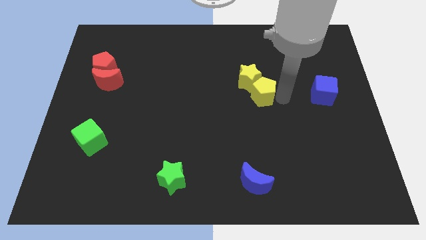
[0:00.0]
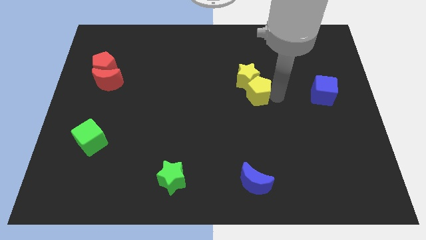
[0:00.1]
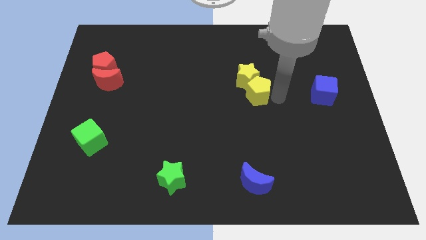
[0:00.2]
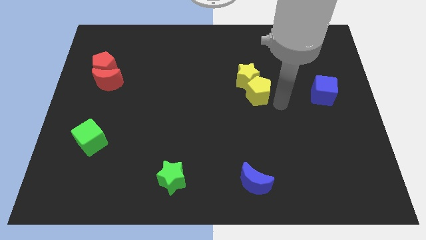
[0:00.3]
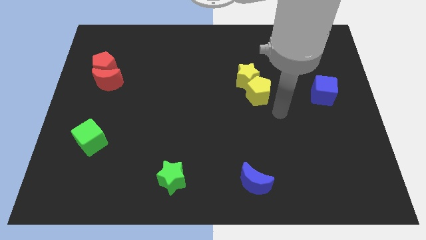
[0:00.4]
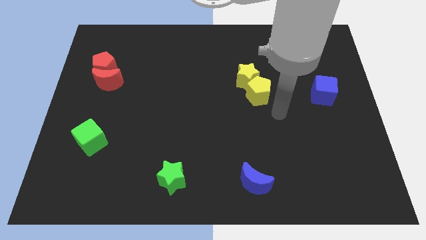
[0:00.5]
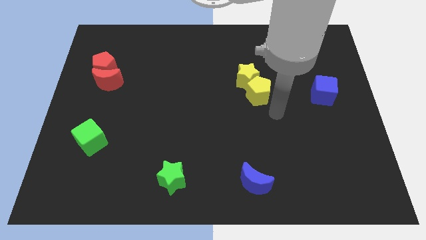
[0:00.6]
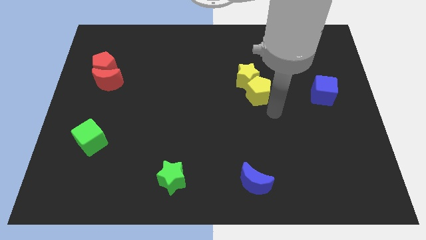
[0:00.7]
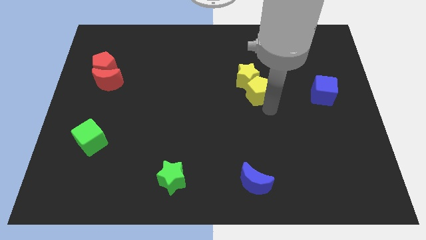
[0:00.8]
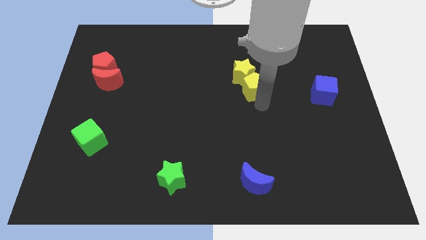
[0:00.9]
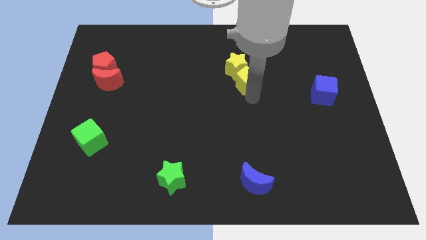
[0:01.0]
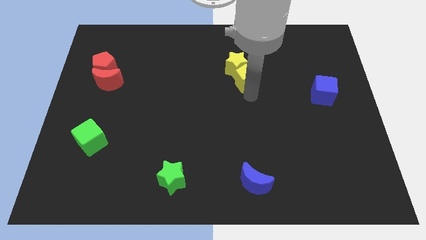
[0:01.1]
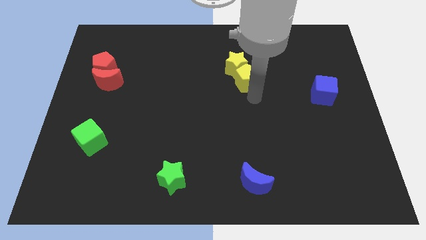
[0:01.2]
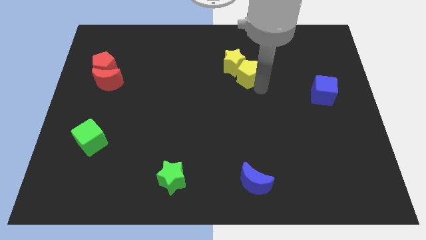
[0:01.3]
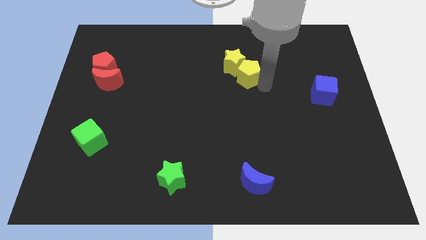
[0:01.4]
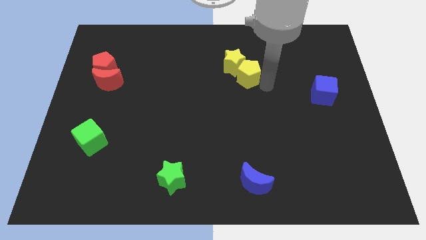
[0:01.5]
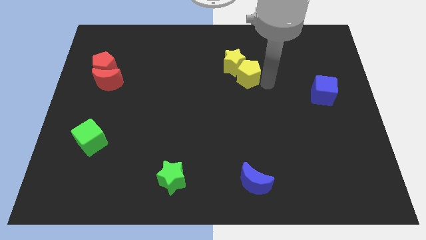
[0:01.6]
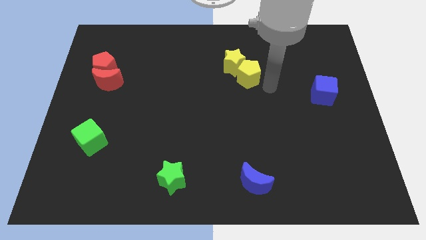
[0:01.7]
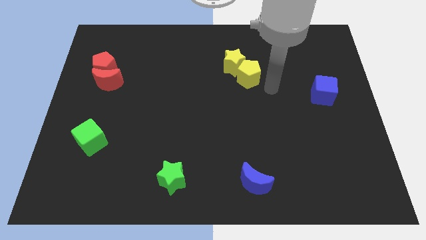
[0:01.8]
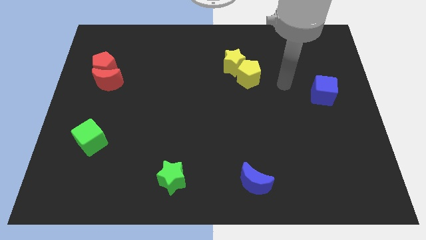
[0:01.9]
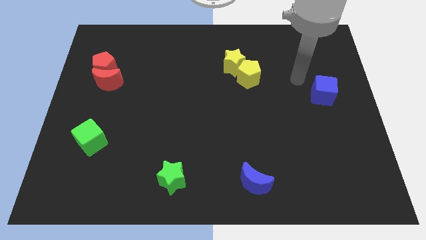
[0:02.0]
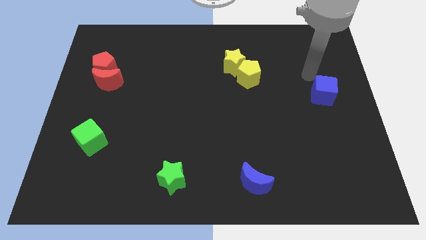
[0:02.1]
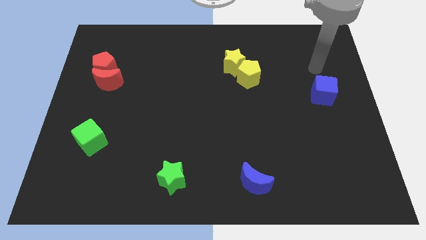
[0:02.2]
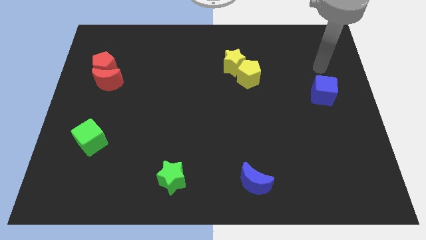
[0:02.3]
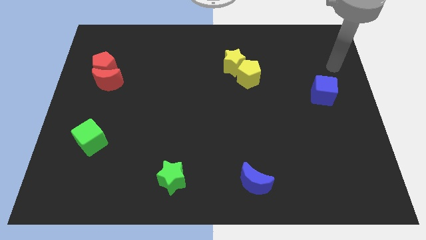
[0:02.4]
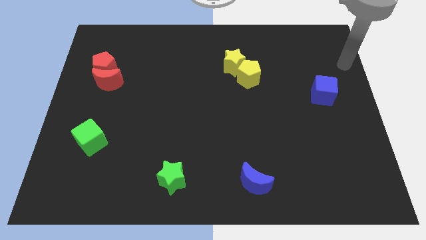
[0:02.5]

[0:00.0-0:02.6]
move the yellow pentagon into the yellow star

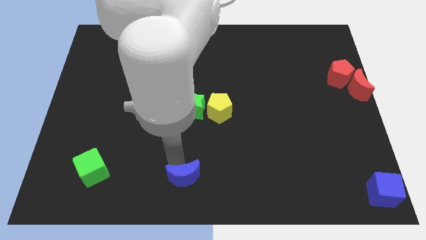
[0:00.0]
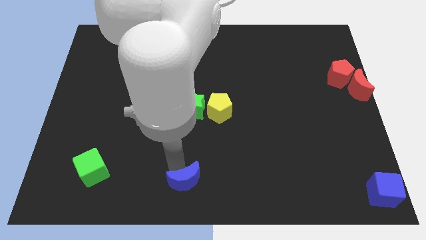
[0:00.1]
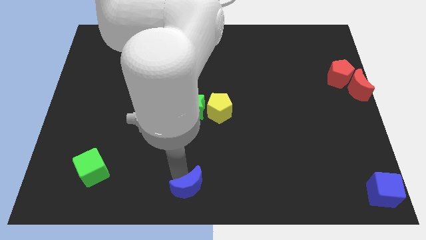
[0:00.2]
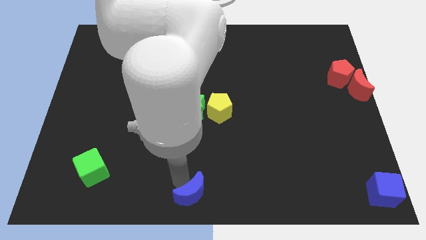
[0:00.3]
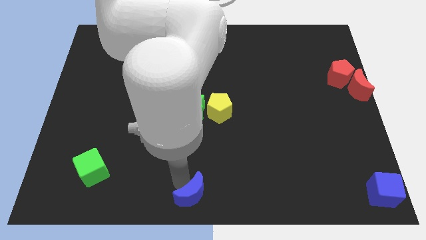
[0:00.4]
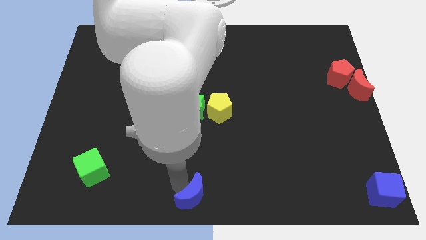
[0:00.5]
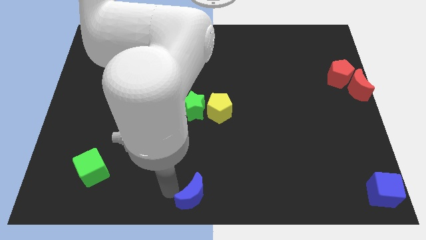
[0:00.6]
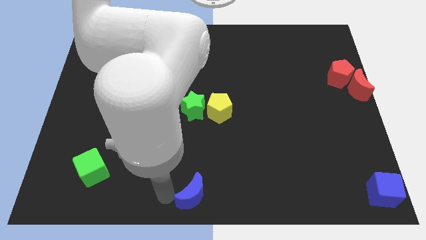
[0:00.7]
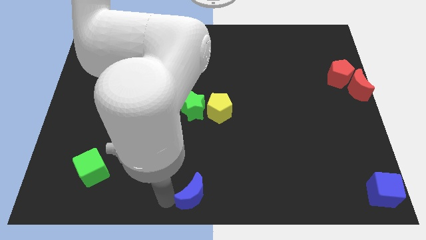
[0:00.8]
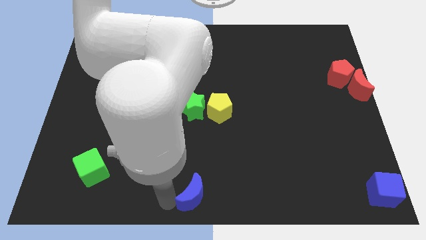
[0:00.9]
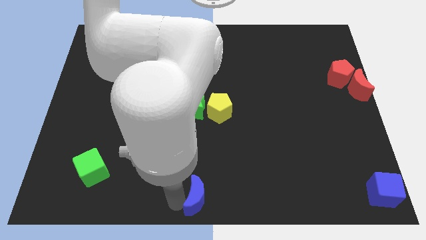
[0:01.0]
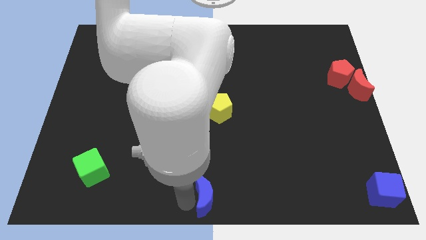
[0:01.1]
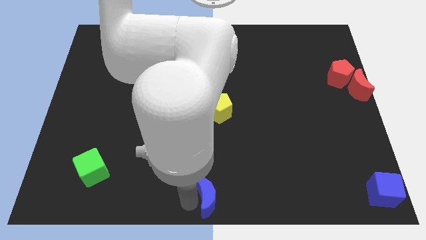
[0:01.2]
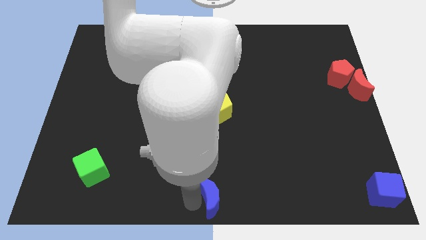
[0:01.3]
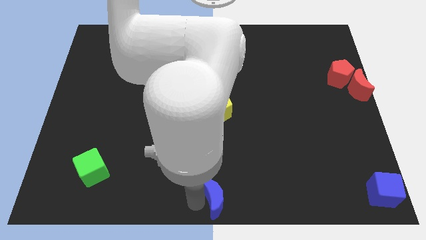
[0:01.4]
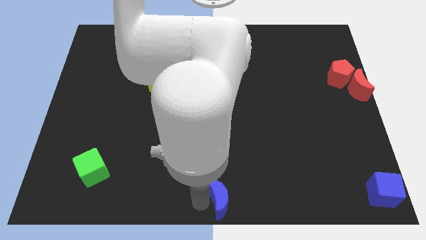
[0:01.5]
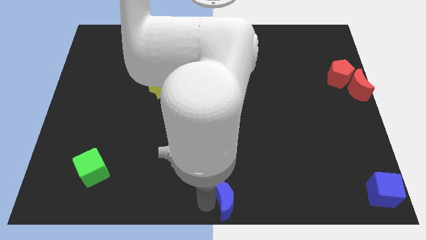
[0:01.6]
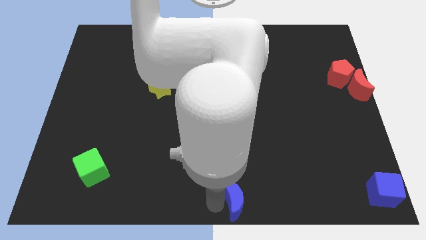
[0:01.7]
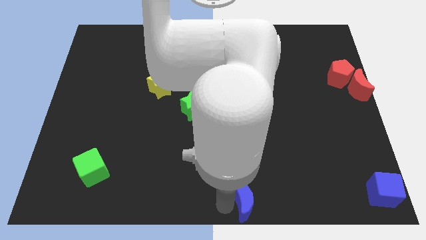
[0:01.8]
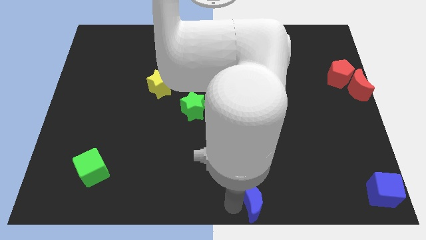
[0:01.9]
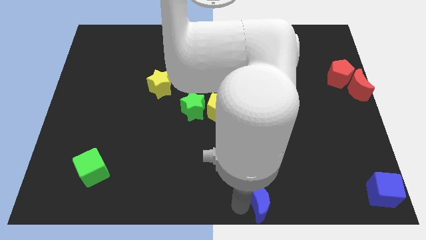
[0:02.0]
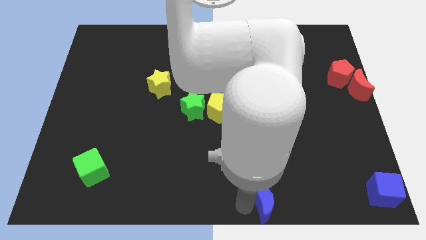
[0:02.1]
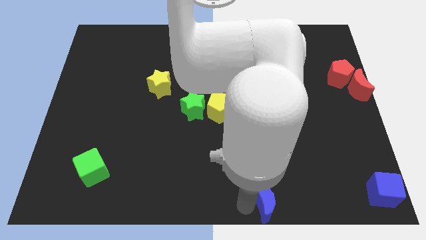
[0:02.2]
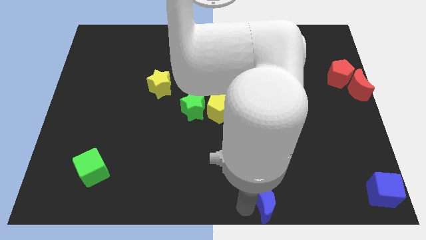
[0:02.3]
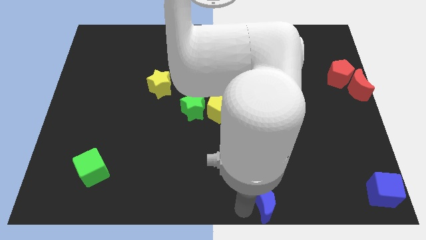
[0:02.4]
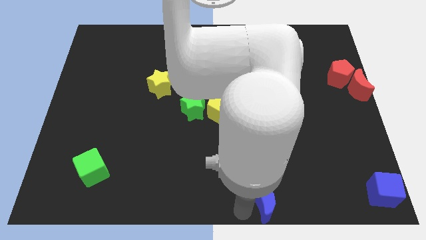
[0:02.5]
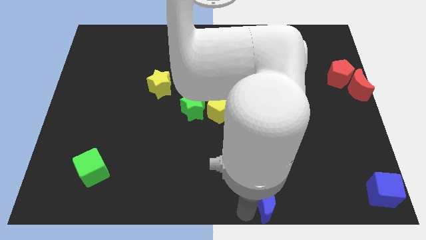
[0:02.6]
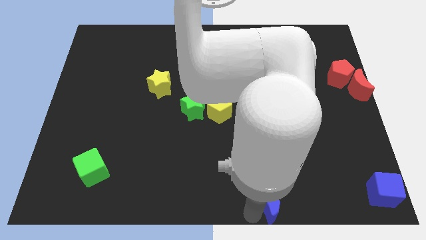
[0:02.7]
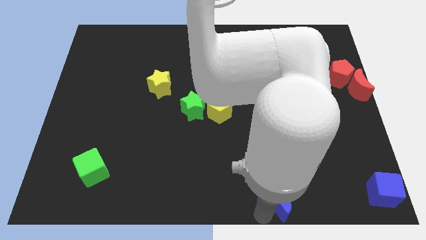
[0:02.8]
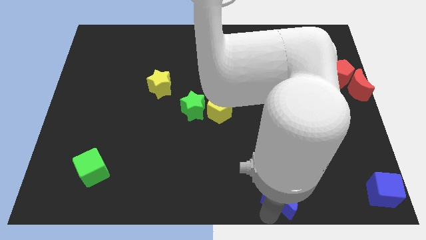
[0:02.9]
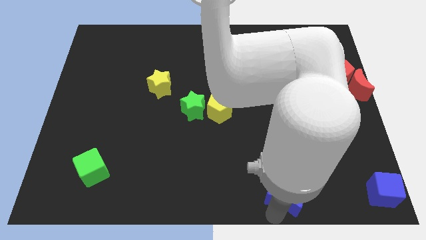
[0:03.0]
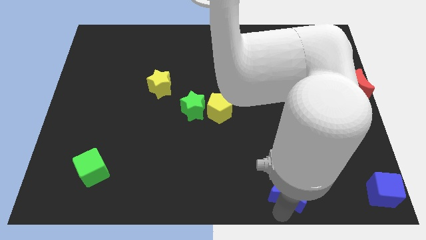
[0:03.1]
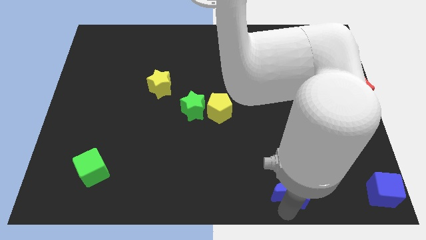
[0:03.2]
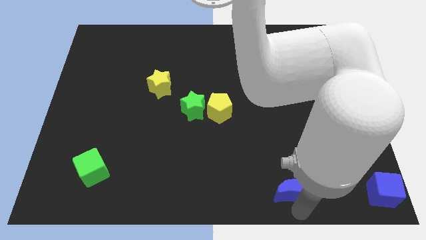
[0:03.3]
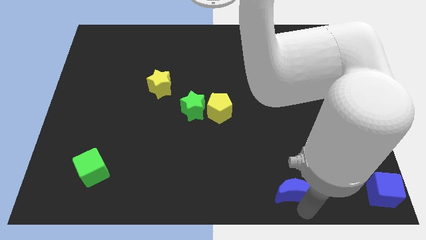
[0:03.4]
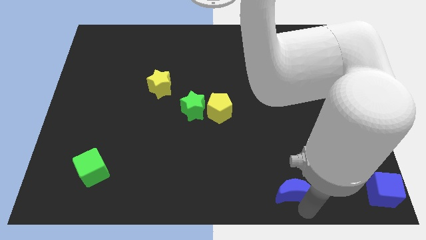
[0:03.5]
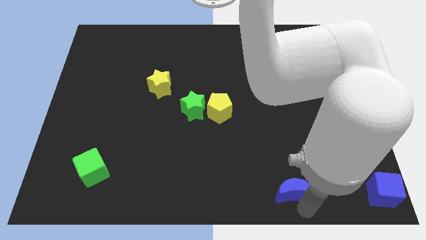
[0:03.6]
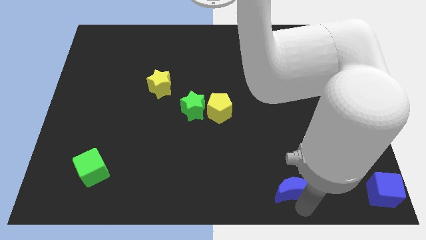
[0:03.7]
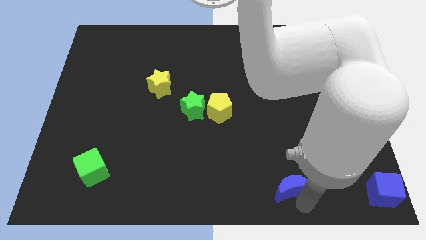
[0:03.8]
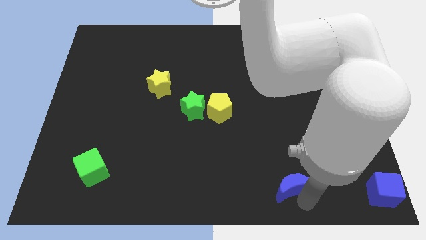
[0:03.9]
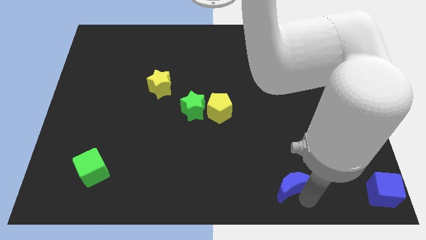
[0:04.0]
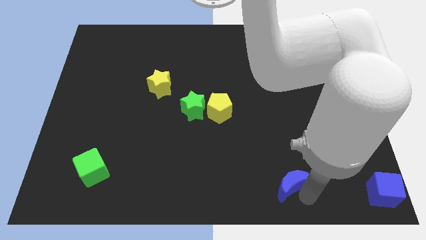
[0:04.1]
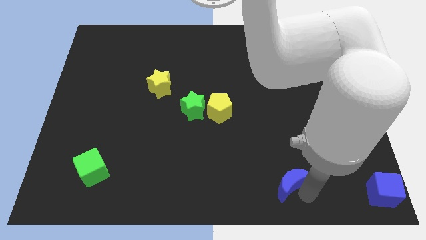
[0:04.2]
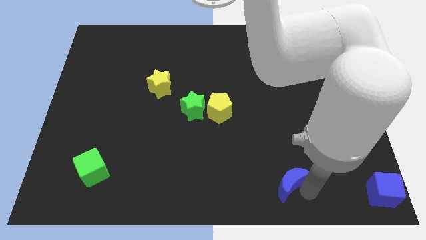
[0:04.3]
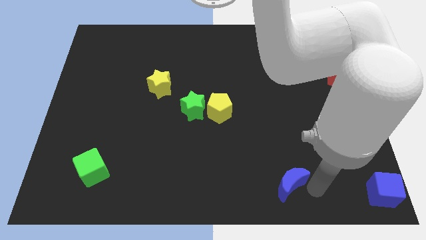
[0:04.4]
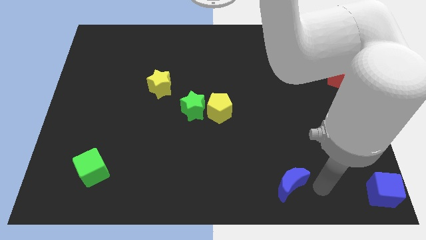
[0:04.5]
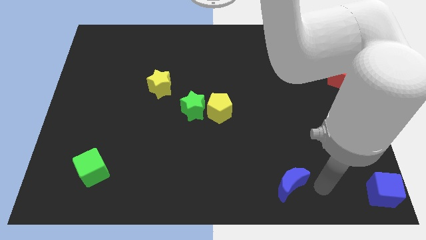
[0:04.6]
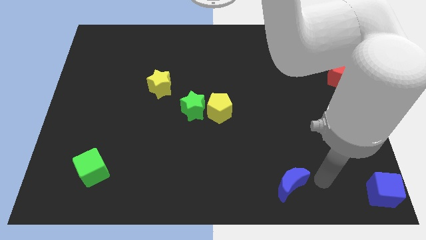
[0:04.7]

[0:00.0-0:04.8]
slide the blue moon diagonally bottom right to the green star

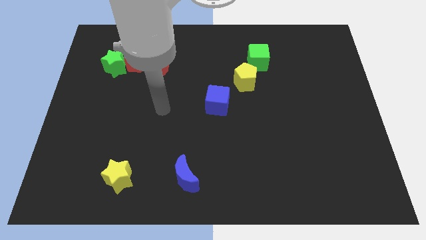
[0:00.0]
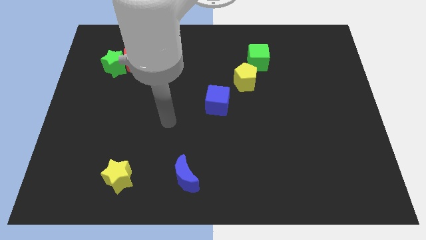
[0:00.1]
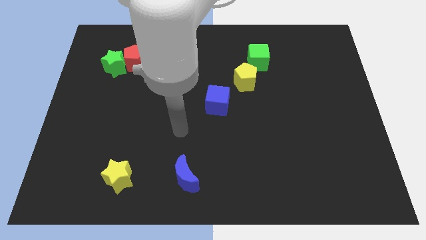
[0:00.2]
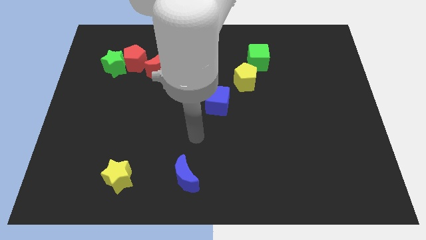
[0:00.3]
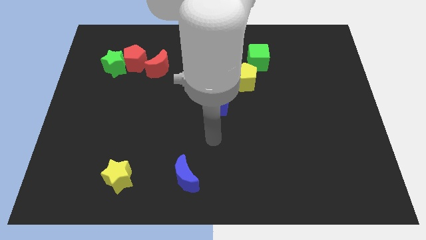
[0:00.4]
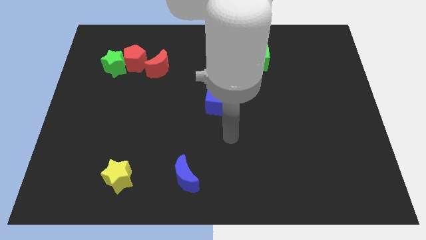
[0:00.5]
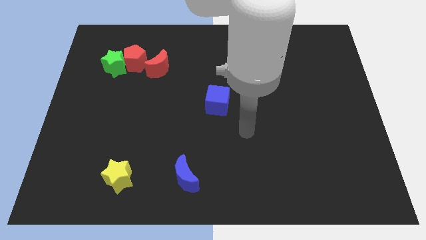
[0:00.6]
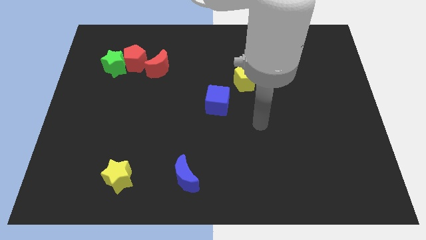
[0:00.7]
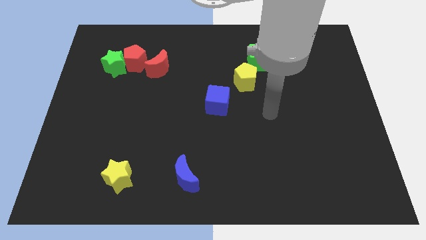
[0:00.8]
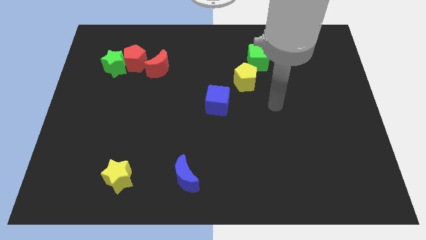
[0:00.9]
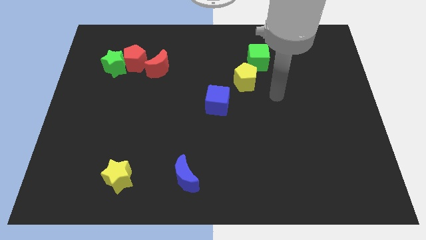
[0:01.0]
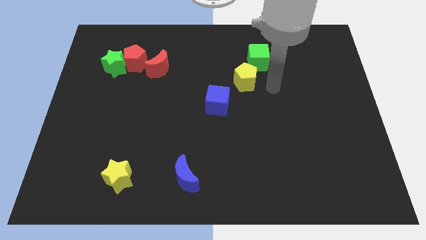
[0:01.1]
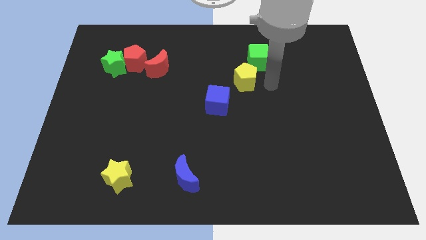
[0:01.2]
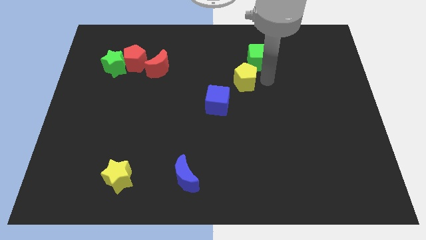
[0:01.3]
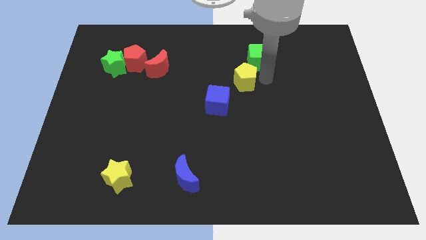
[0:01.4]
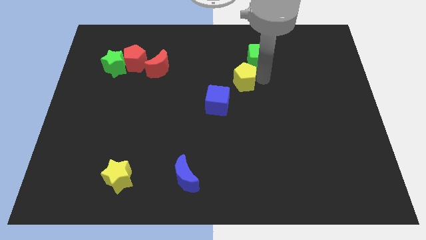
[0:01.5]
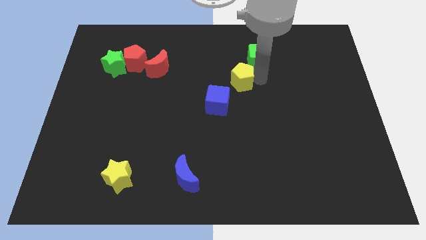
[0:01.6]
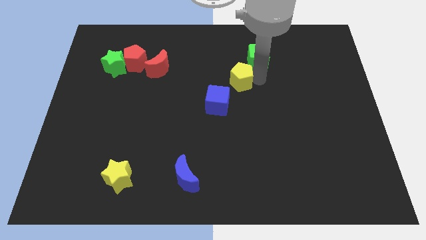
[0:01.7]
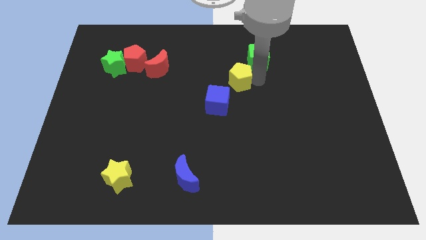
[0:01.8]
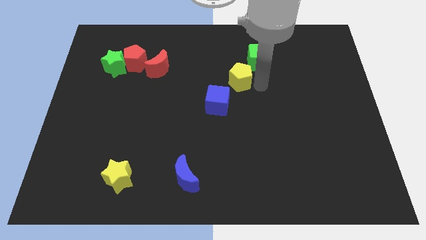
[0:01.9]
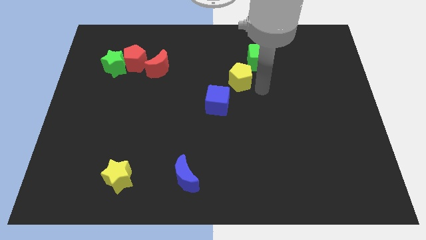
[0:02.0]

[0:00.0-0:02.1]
push yellow pentagon a bit
